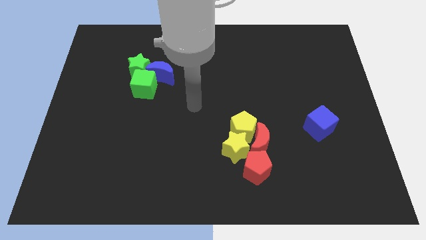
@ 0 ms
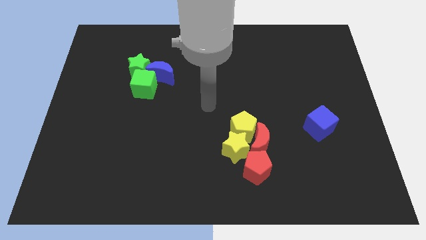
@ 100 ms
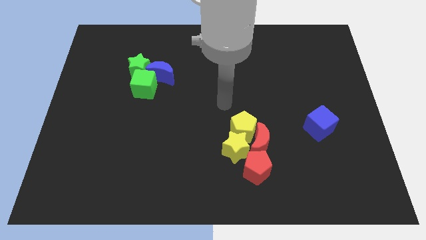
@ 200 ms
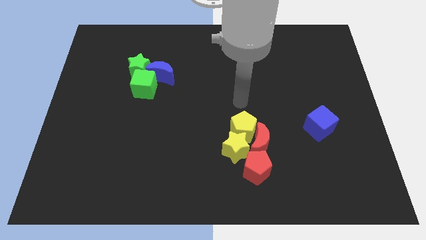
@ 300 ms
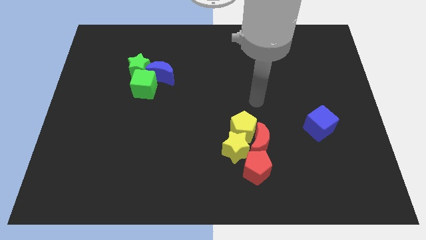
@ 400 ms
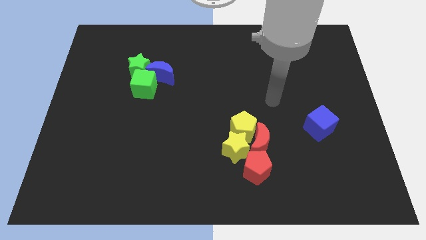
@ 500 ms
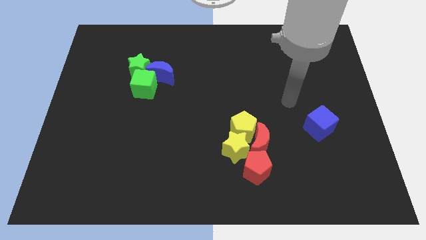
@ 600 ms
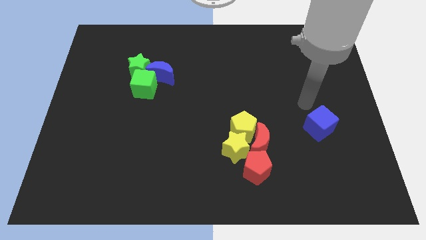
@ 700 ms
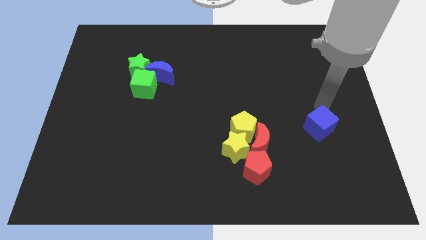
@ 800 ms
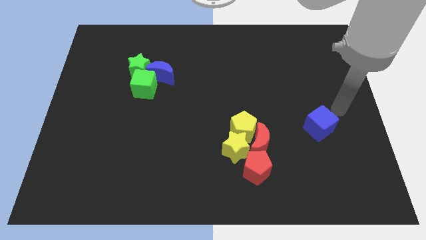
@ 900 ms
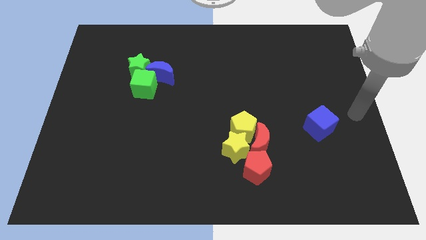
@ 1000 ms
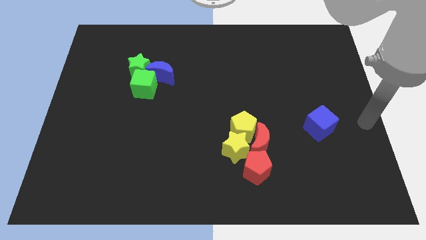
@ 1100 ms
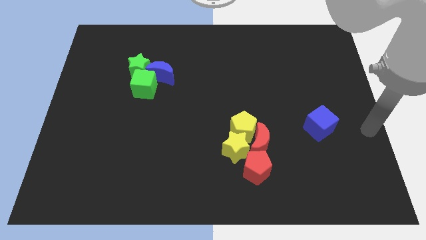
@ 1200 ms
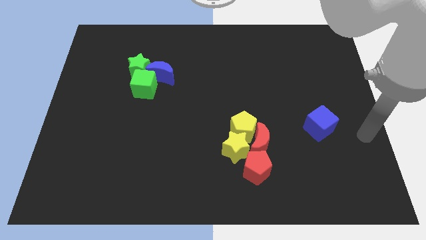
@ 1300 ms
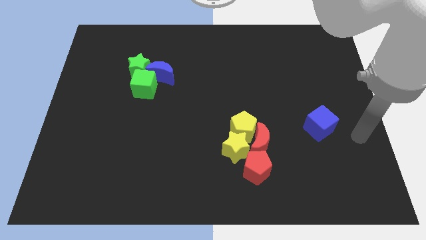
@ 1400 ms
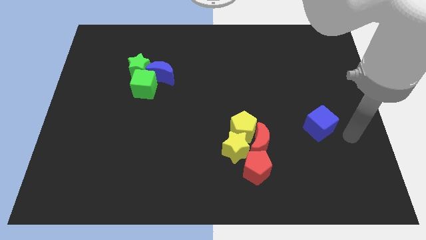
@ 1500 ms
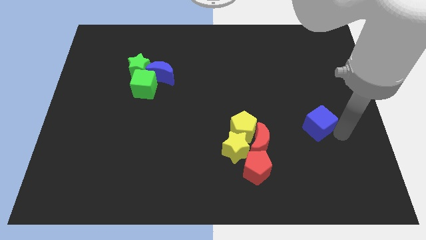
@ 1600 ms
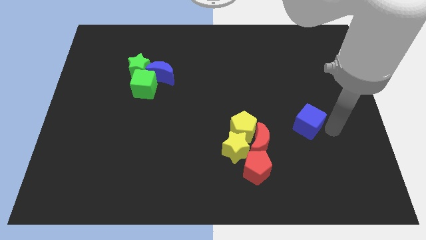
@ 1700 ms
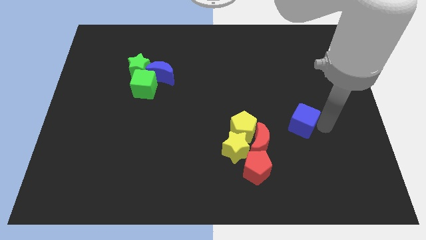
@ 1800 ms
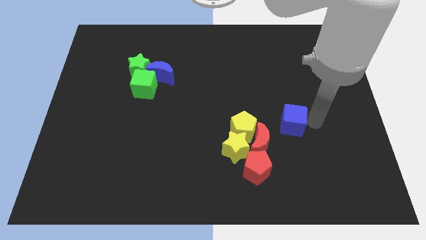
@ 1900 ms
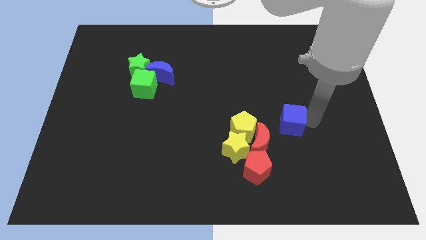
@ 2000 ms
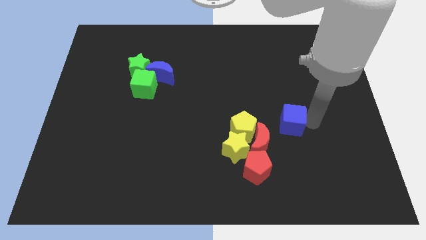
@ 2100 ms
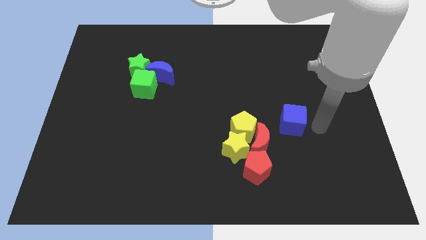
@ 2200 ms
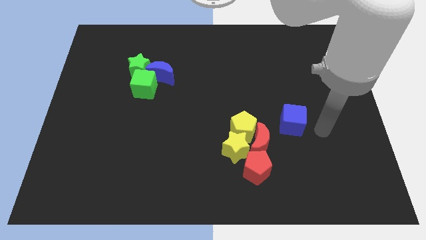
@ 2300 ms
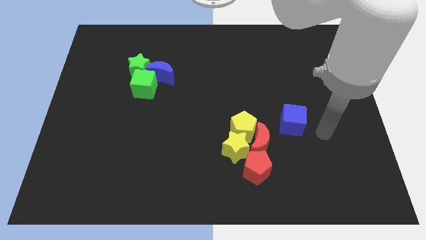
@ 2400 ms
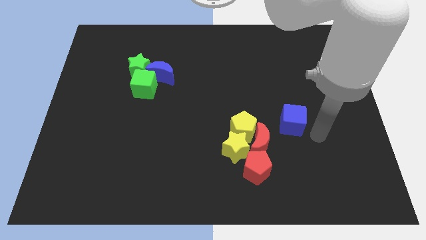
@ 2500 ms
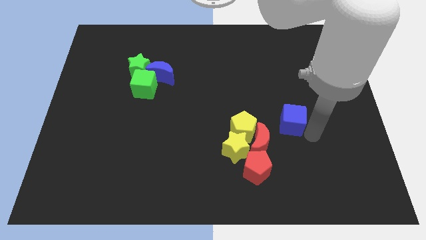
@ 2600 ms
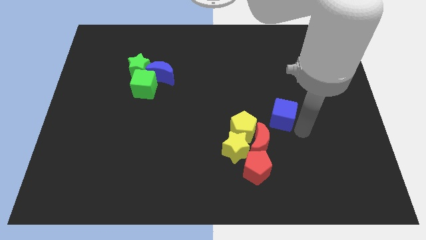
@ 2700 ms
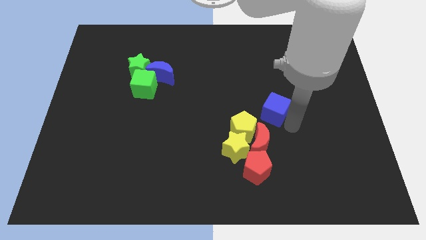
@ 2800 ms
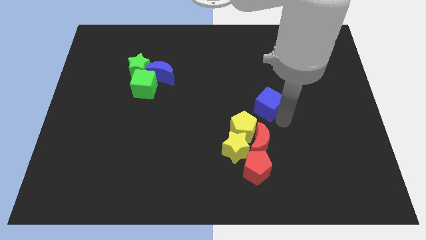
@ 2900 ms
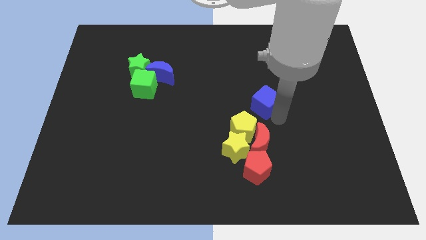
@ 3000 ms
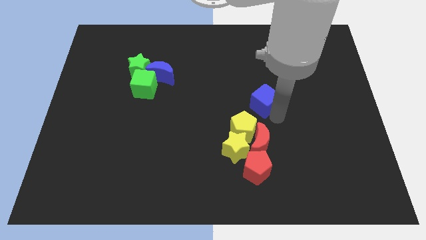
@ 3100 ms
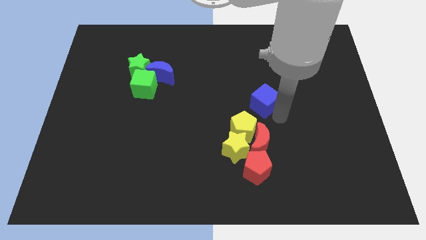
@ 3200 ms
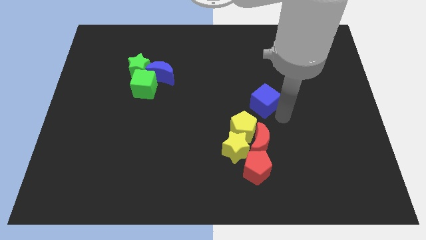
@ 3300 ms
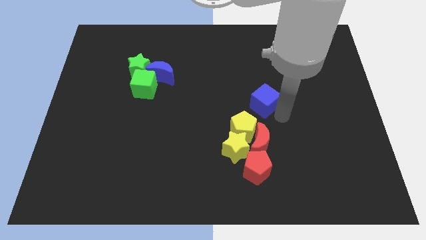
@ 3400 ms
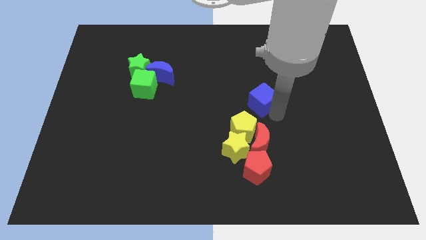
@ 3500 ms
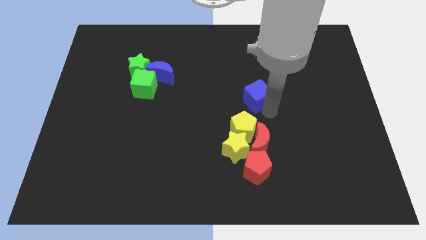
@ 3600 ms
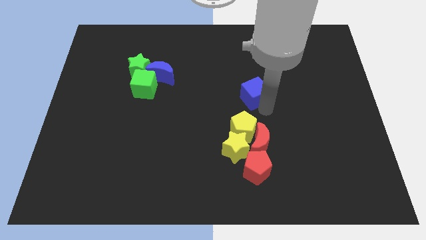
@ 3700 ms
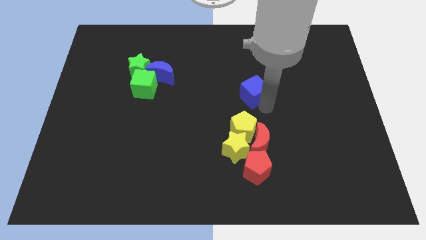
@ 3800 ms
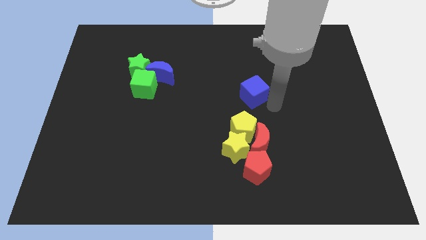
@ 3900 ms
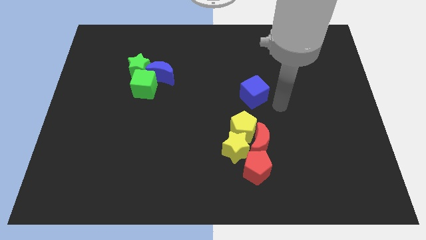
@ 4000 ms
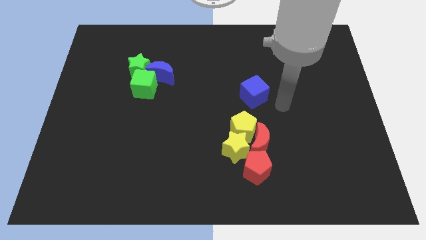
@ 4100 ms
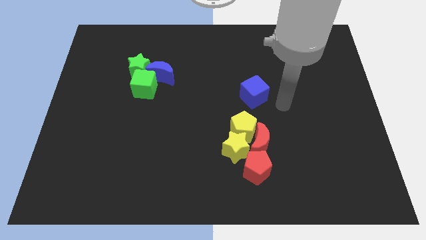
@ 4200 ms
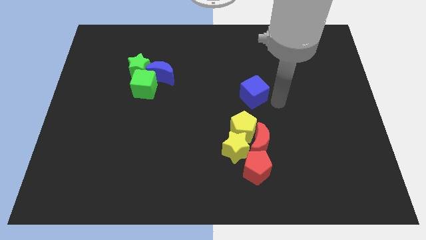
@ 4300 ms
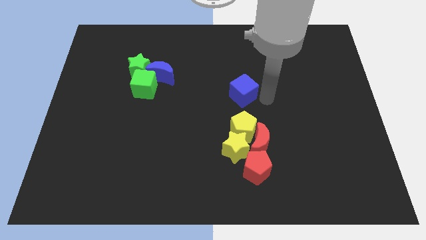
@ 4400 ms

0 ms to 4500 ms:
push the blue cube to the top of the yellow pentagon

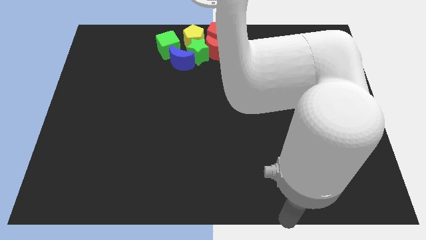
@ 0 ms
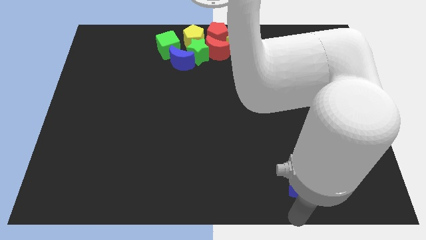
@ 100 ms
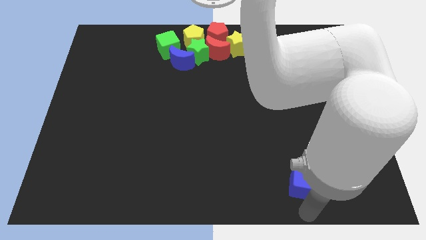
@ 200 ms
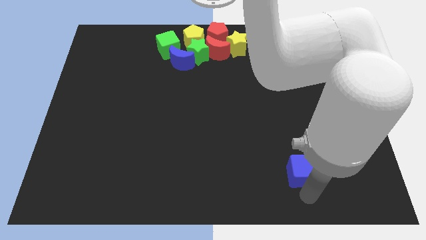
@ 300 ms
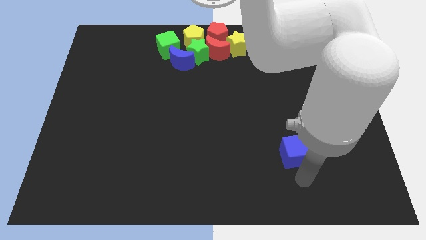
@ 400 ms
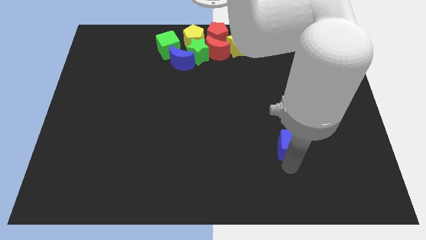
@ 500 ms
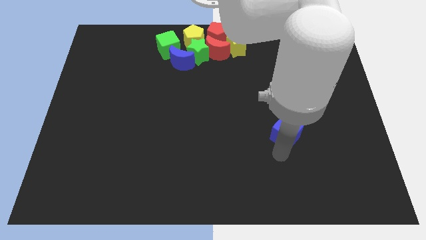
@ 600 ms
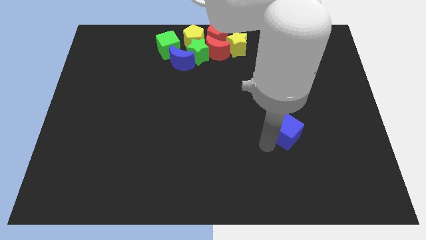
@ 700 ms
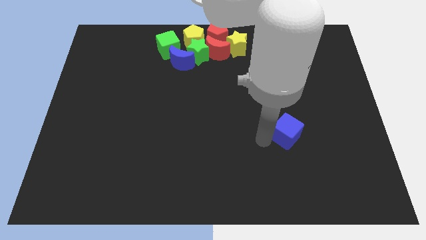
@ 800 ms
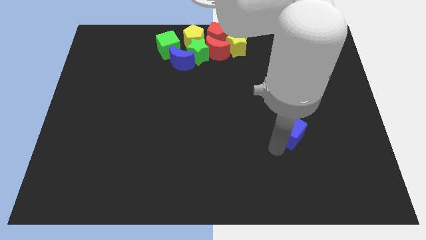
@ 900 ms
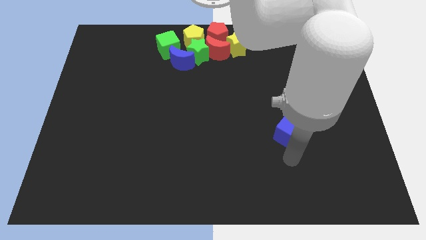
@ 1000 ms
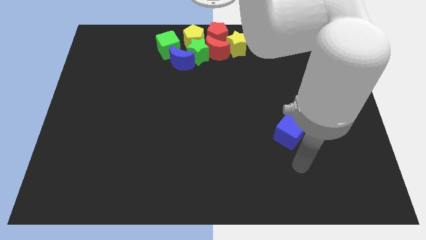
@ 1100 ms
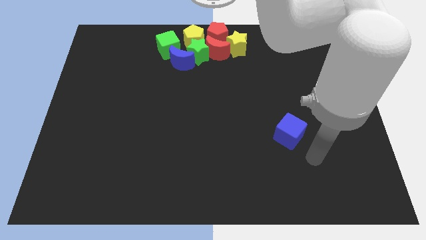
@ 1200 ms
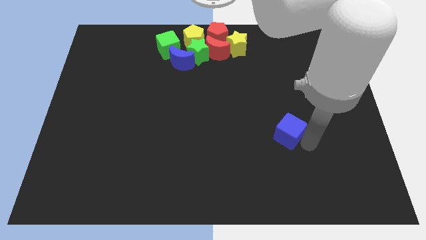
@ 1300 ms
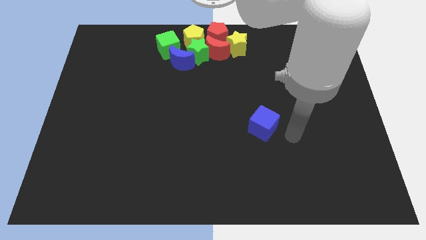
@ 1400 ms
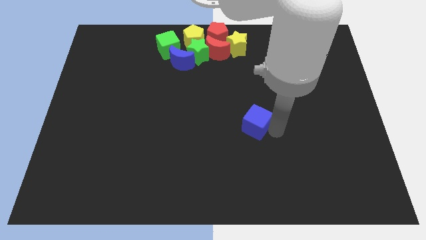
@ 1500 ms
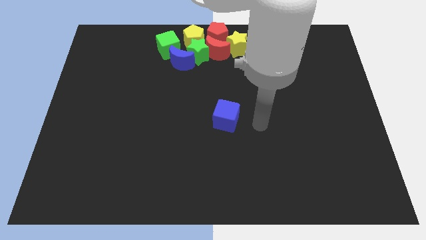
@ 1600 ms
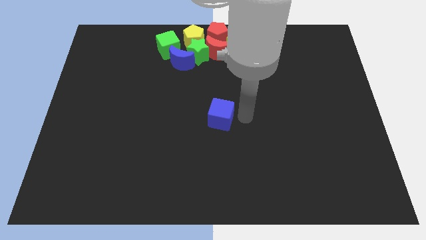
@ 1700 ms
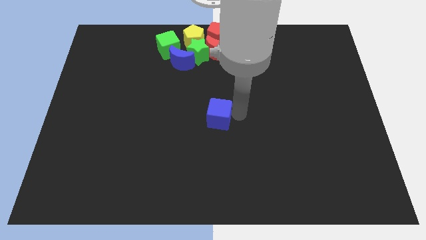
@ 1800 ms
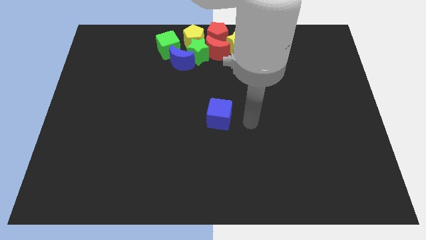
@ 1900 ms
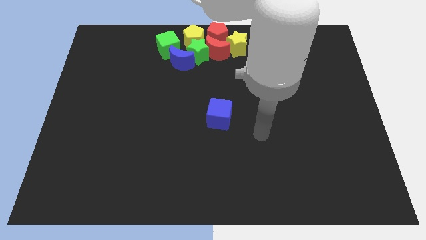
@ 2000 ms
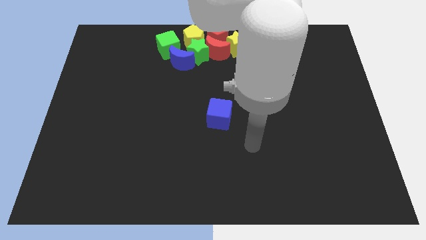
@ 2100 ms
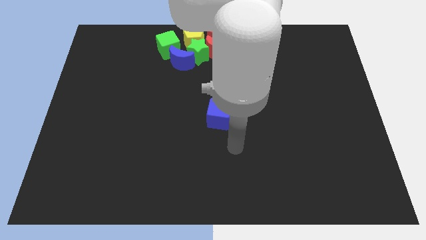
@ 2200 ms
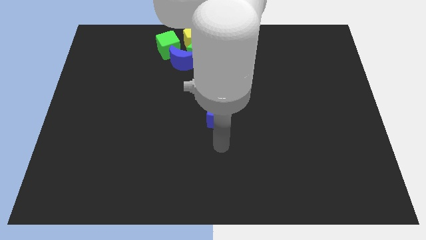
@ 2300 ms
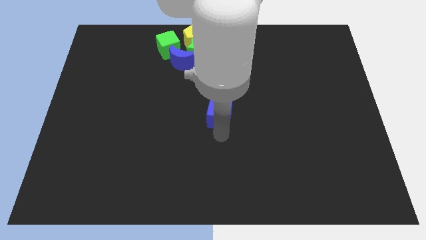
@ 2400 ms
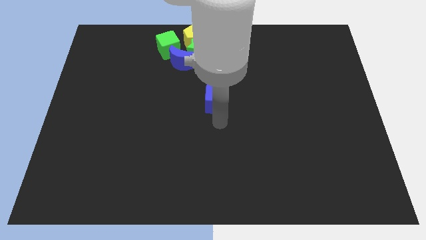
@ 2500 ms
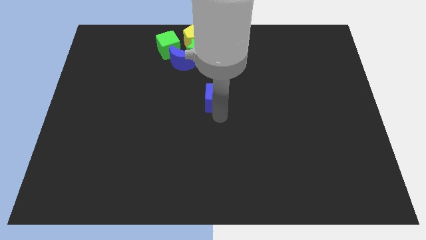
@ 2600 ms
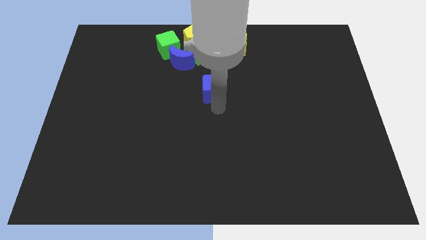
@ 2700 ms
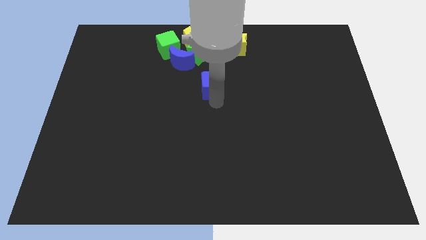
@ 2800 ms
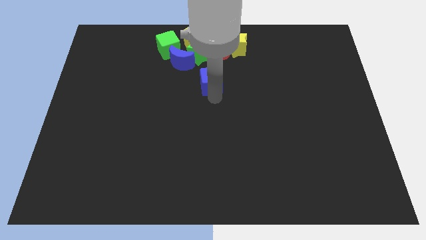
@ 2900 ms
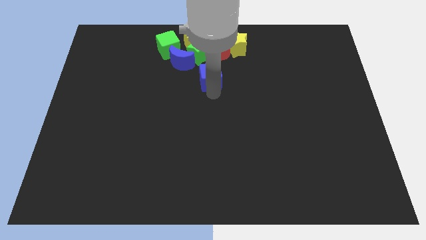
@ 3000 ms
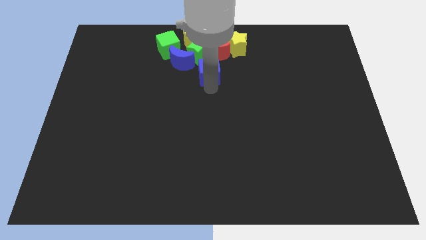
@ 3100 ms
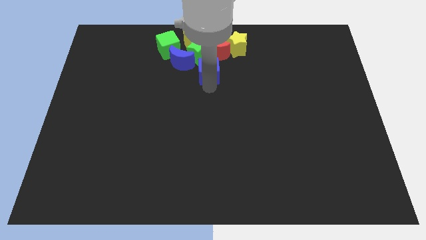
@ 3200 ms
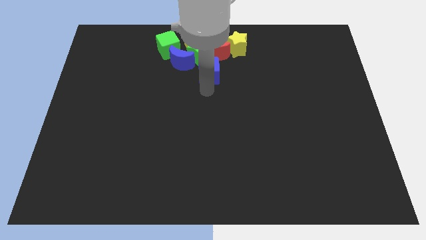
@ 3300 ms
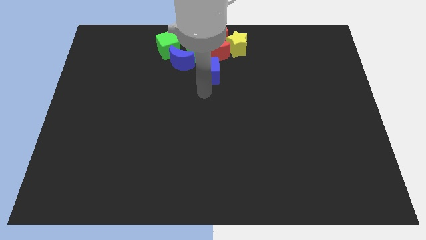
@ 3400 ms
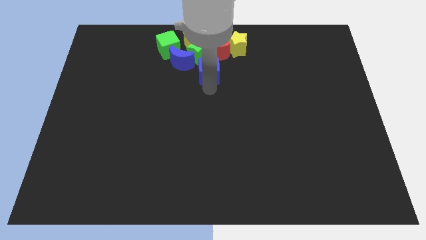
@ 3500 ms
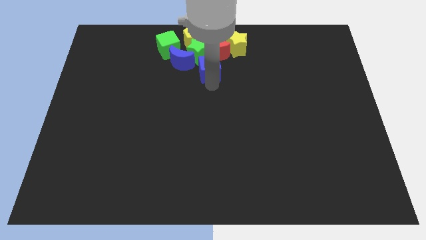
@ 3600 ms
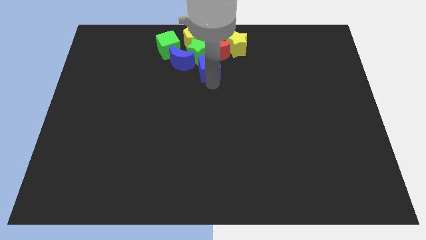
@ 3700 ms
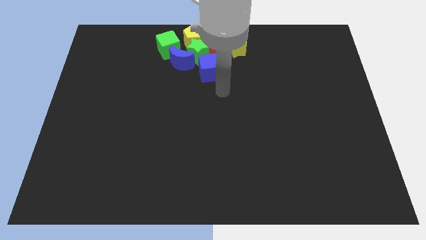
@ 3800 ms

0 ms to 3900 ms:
move blue cube to the bottom of green star

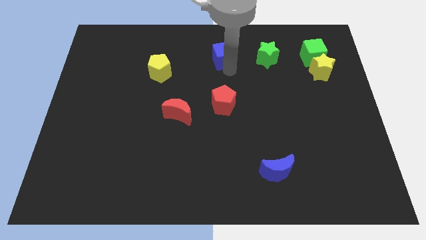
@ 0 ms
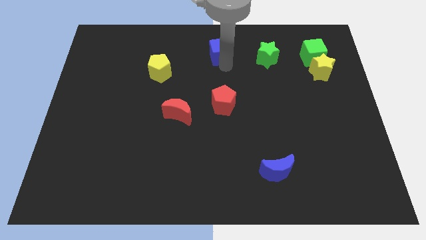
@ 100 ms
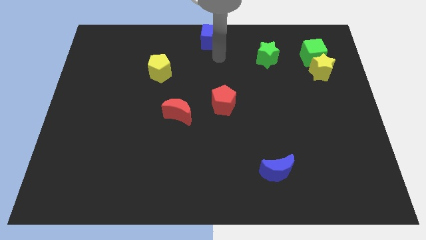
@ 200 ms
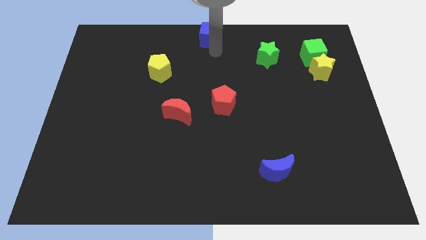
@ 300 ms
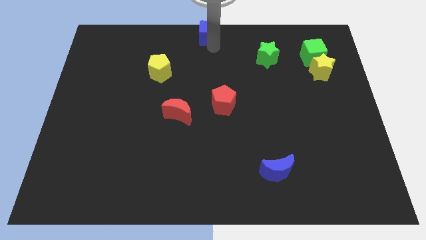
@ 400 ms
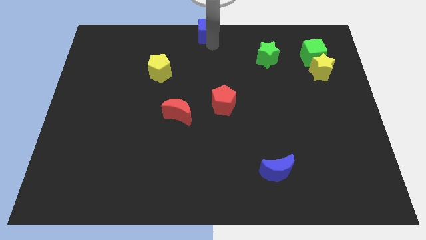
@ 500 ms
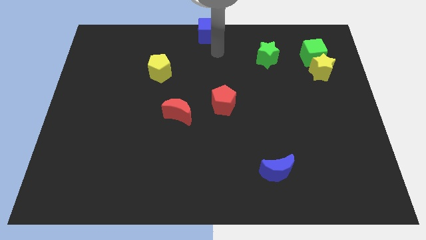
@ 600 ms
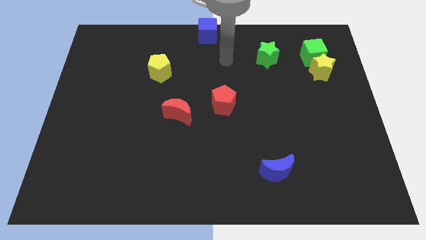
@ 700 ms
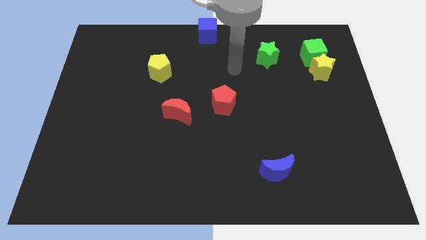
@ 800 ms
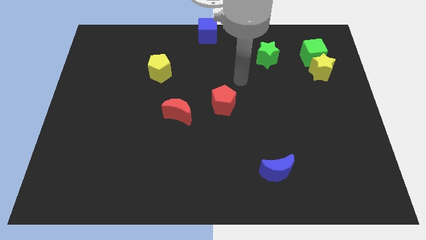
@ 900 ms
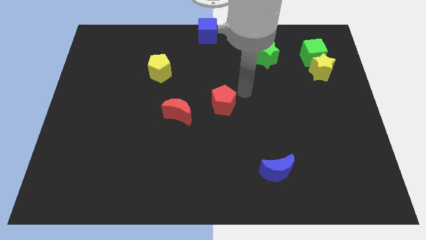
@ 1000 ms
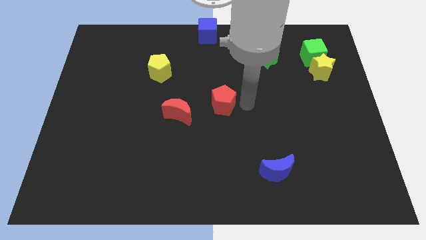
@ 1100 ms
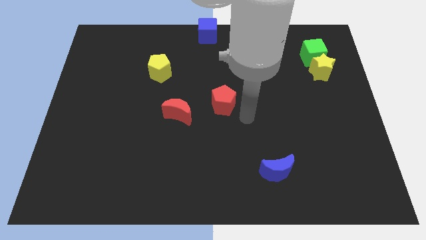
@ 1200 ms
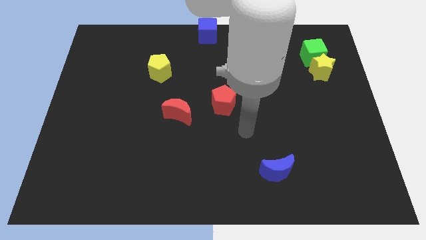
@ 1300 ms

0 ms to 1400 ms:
put the blue cube at the top center
